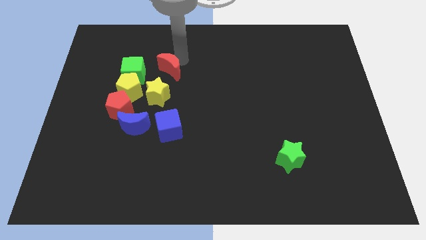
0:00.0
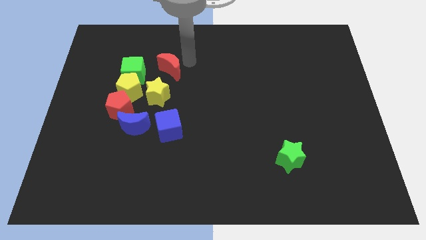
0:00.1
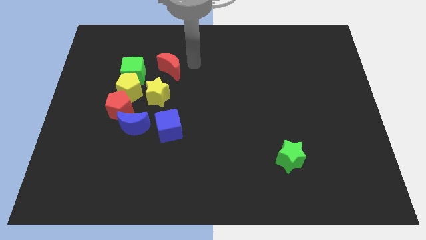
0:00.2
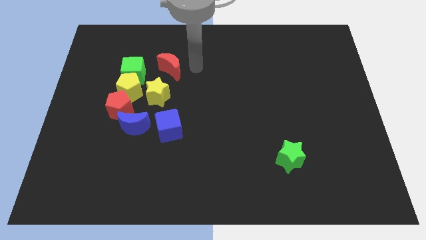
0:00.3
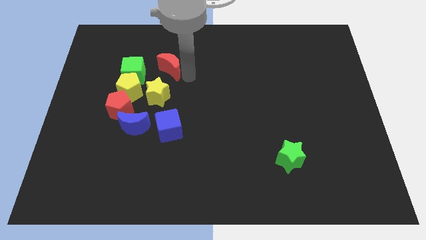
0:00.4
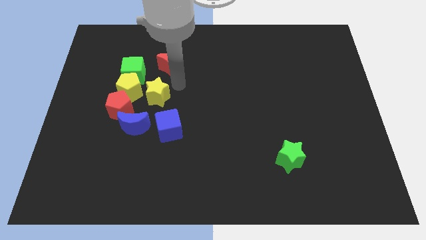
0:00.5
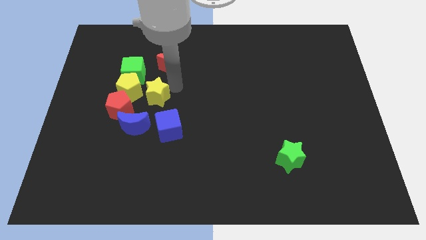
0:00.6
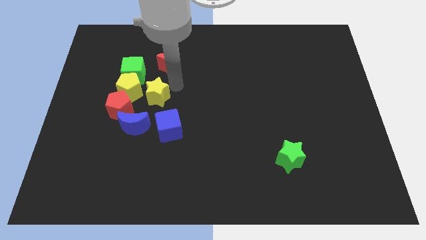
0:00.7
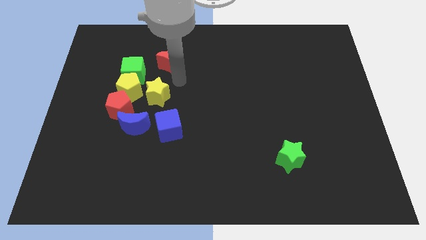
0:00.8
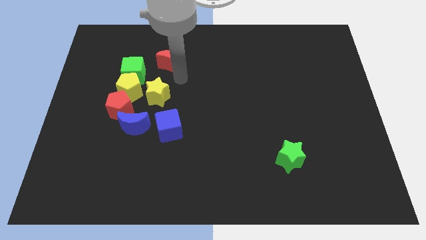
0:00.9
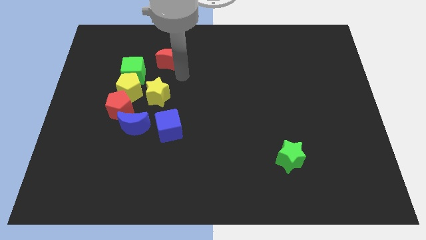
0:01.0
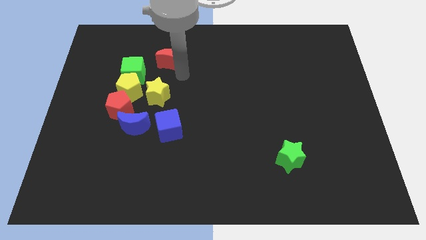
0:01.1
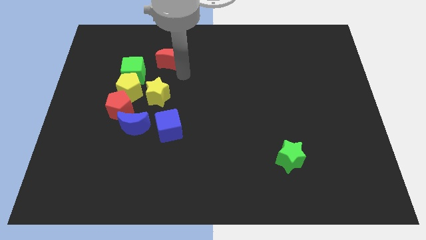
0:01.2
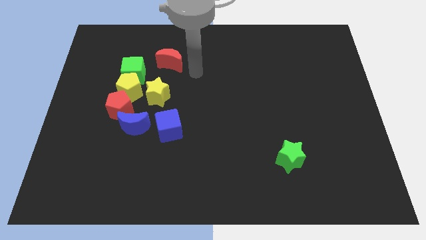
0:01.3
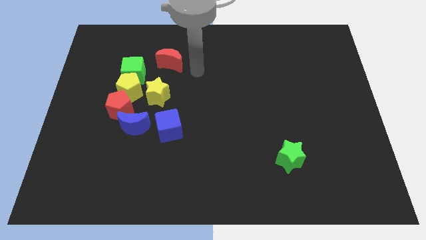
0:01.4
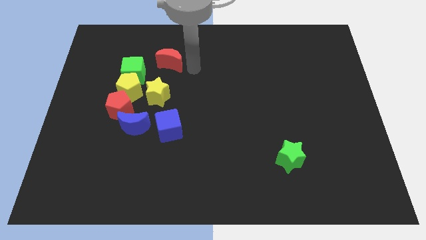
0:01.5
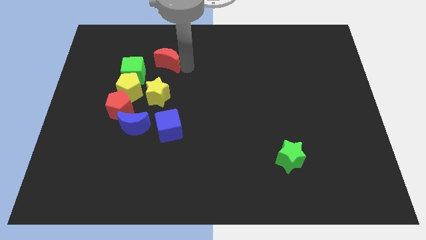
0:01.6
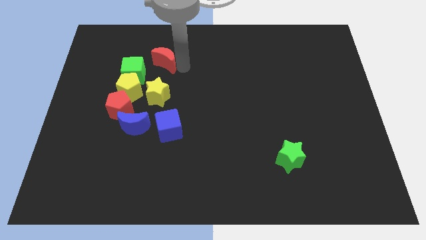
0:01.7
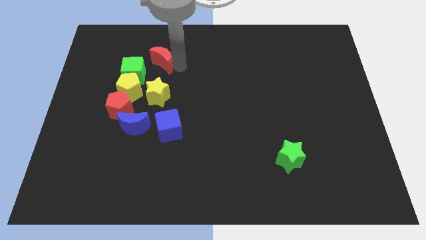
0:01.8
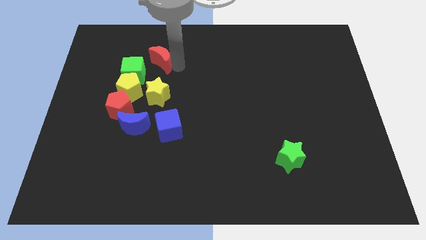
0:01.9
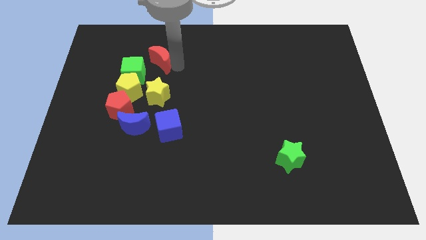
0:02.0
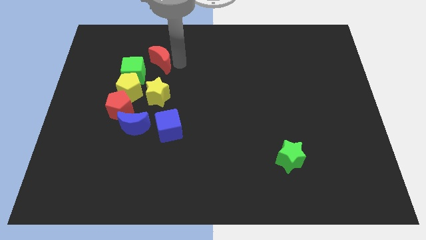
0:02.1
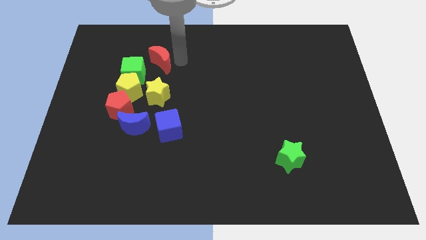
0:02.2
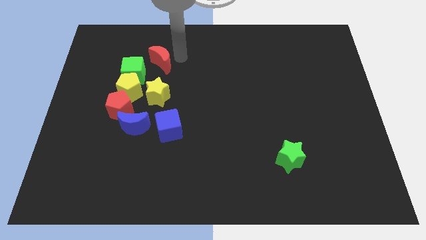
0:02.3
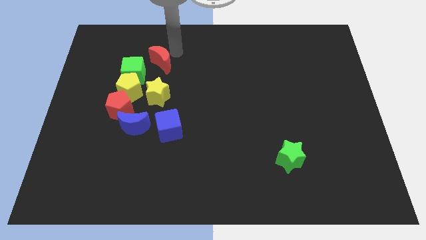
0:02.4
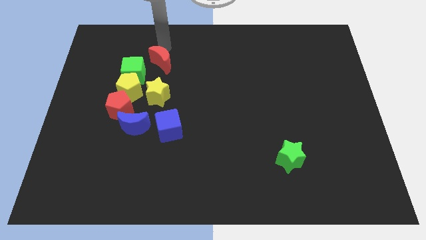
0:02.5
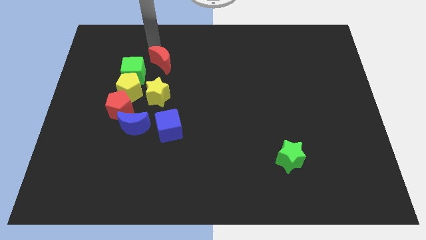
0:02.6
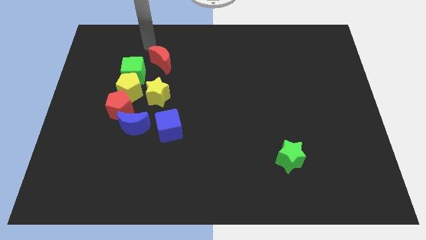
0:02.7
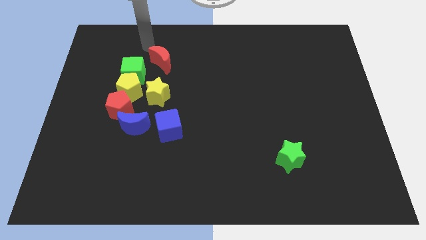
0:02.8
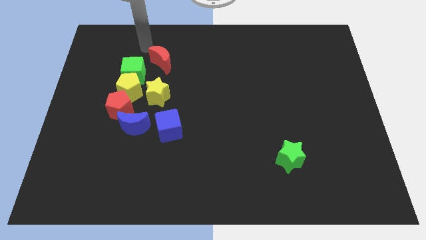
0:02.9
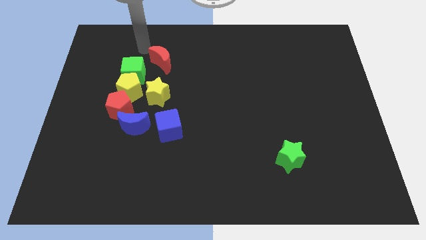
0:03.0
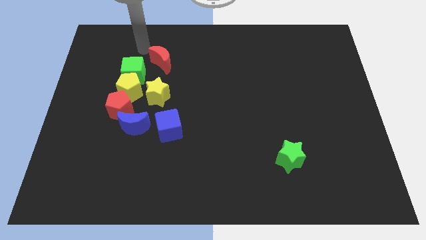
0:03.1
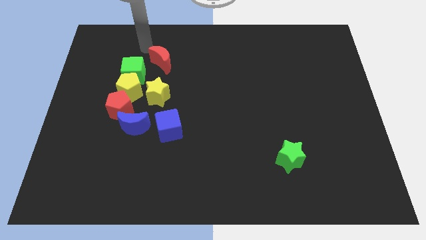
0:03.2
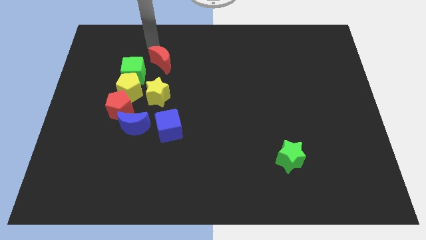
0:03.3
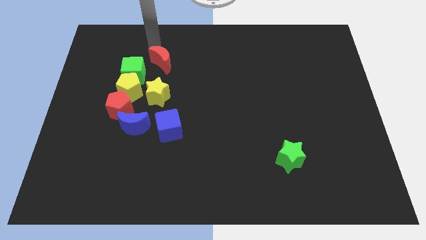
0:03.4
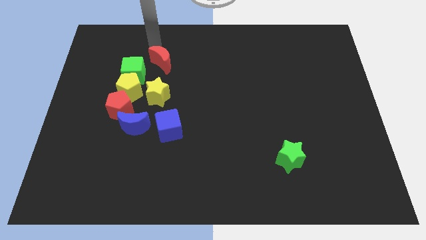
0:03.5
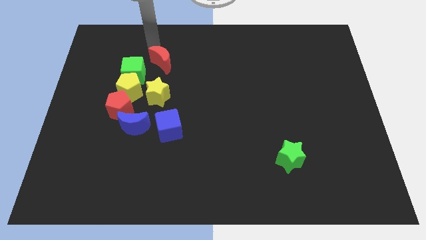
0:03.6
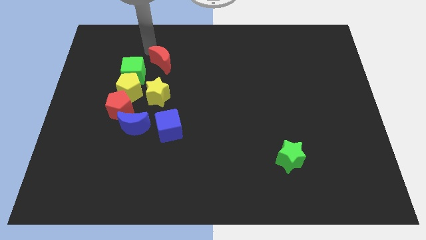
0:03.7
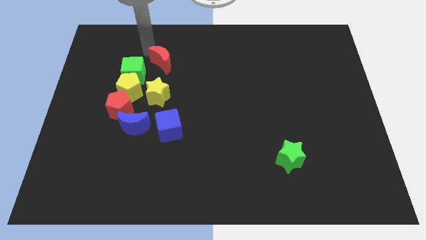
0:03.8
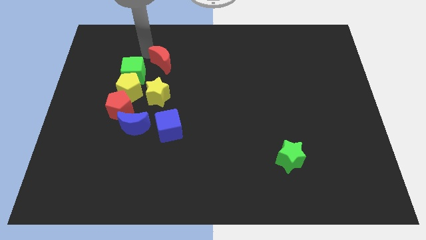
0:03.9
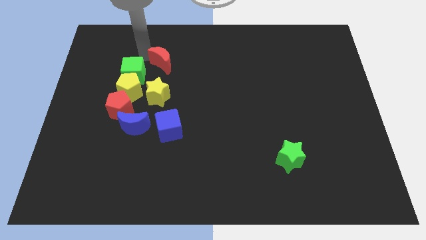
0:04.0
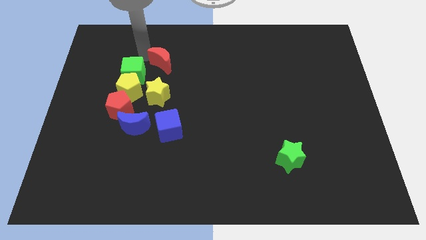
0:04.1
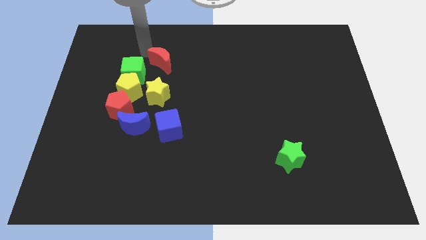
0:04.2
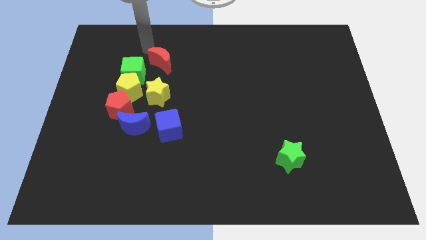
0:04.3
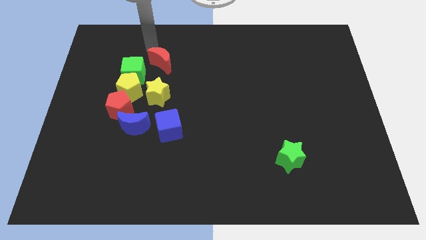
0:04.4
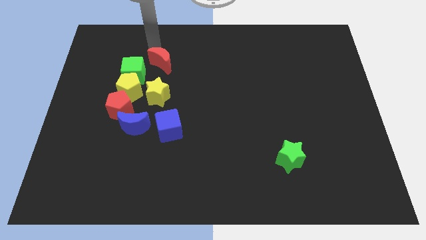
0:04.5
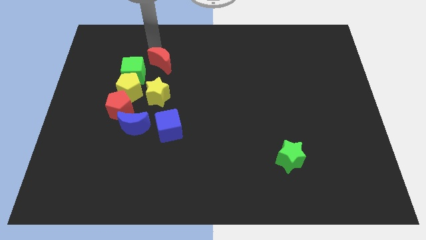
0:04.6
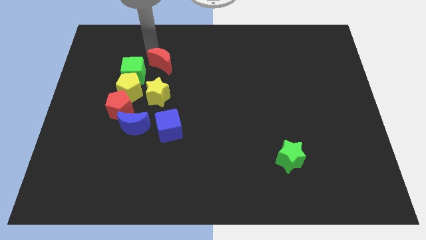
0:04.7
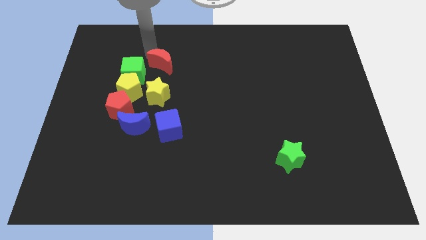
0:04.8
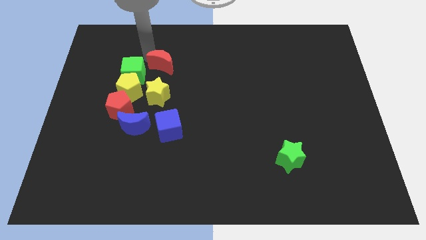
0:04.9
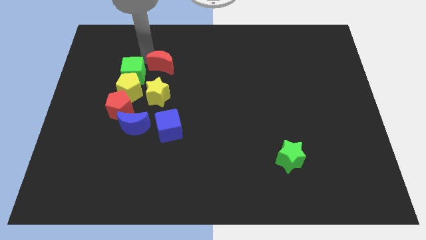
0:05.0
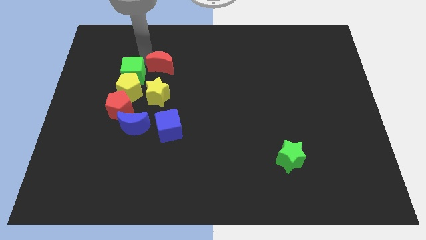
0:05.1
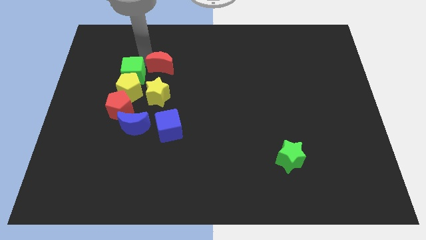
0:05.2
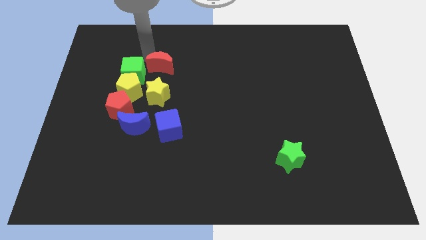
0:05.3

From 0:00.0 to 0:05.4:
move the red moon close to the right side of the green cube

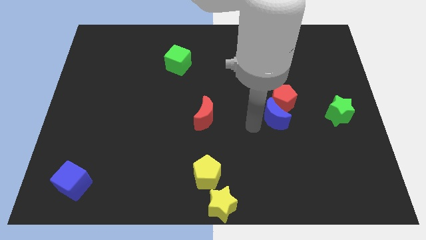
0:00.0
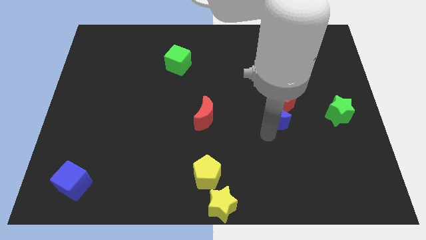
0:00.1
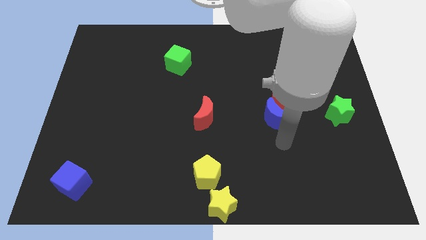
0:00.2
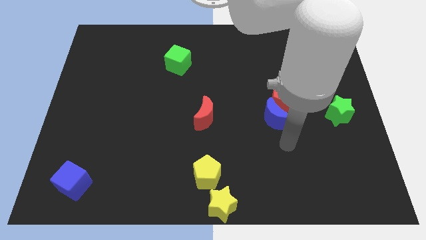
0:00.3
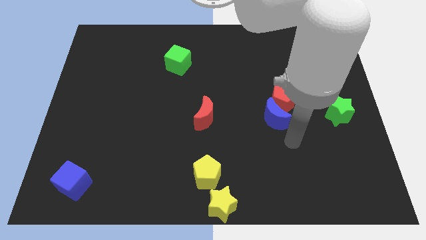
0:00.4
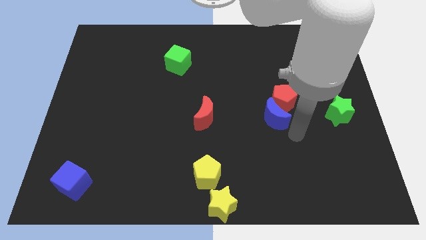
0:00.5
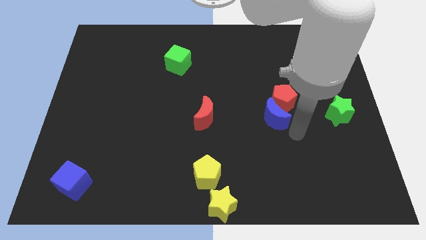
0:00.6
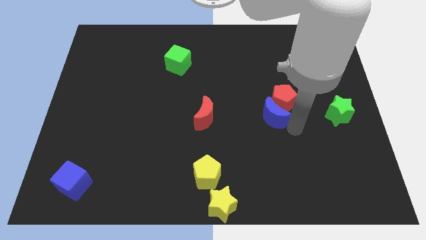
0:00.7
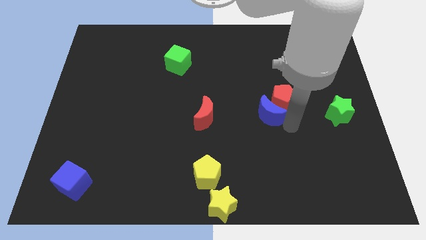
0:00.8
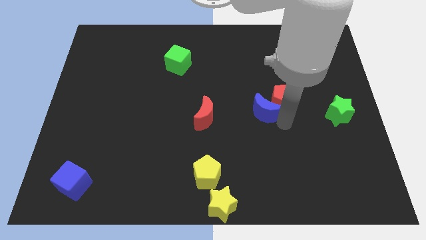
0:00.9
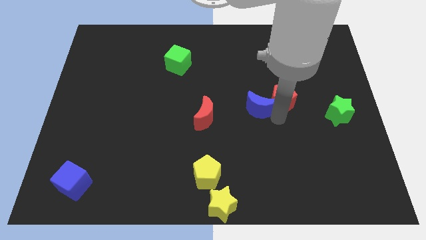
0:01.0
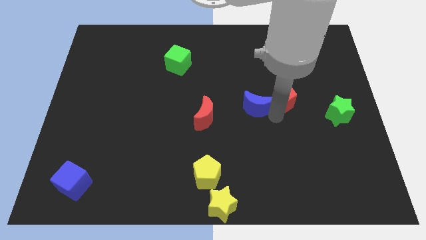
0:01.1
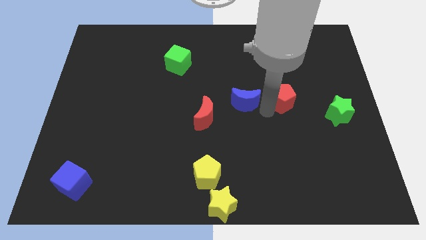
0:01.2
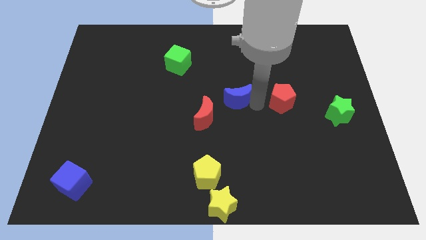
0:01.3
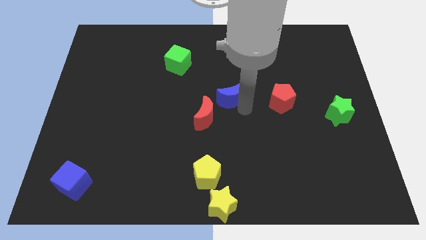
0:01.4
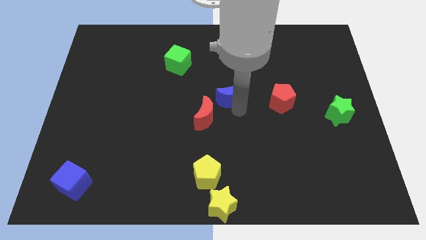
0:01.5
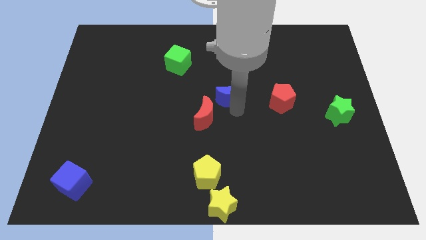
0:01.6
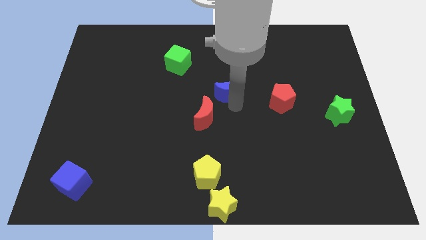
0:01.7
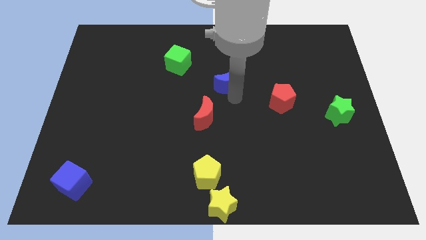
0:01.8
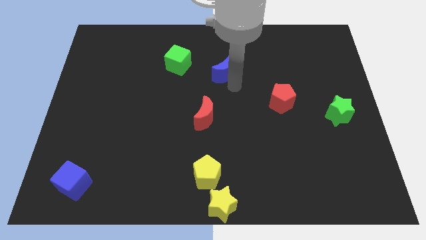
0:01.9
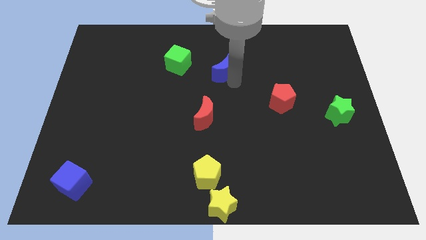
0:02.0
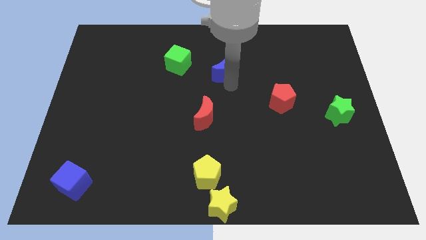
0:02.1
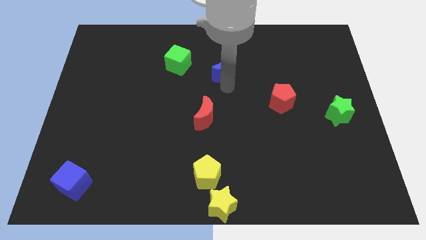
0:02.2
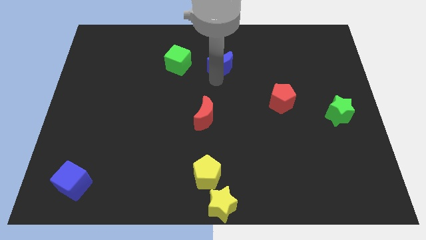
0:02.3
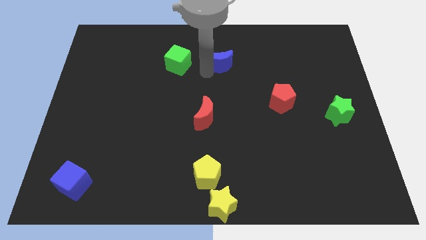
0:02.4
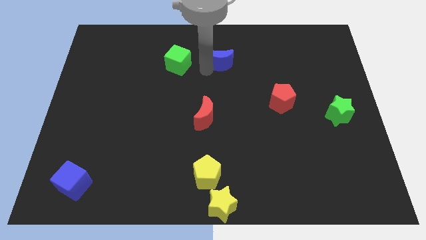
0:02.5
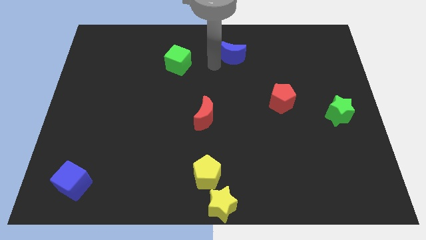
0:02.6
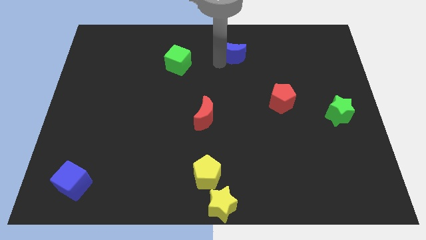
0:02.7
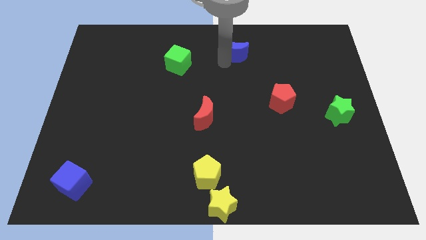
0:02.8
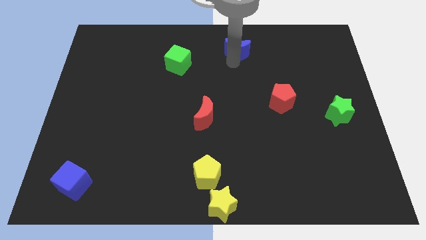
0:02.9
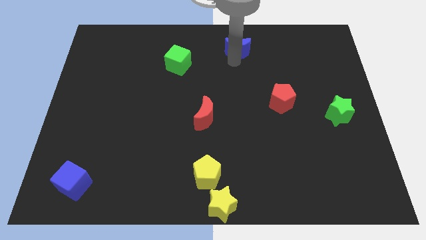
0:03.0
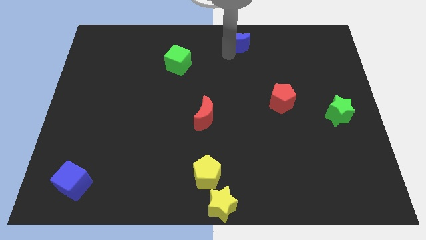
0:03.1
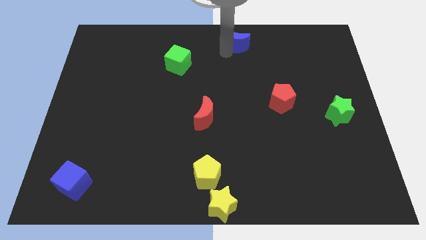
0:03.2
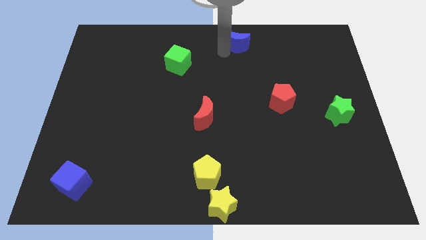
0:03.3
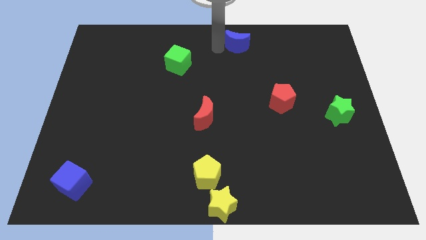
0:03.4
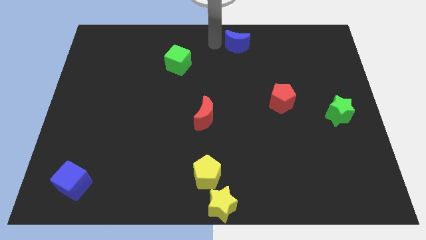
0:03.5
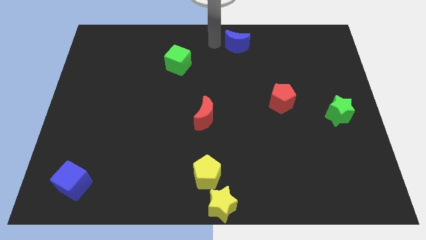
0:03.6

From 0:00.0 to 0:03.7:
move the blue moon to the top center
